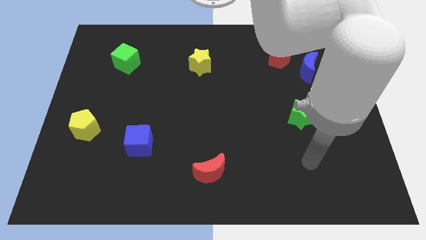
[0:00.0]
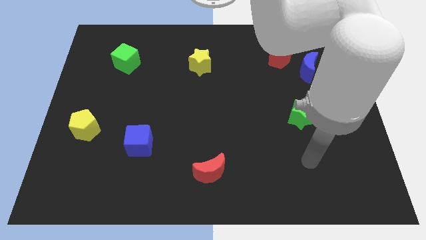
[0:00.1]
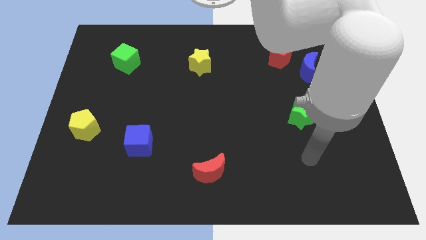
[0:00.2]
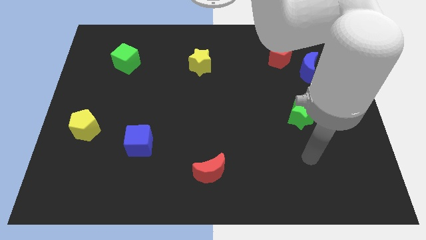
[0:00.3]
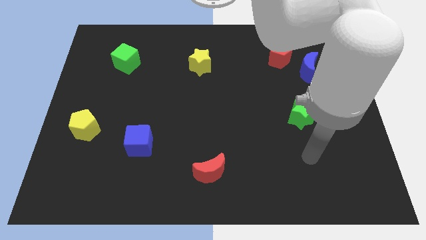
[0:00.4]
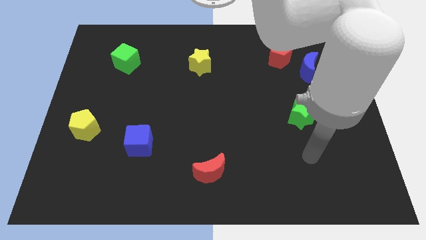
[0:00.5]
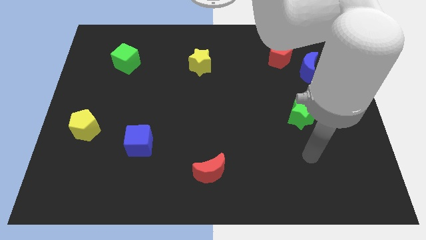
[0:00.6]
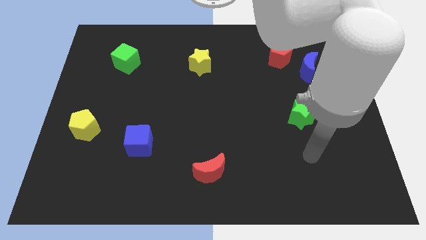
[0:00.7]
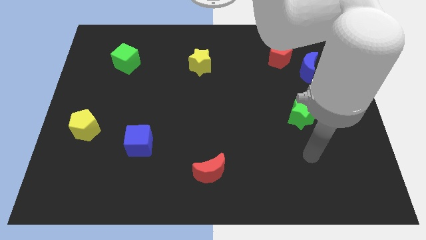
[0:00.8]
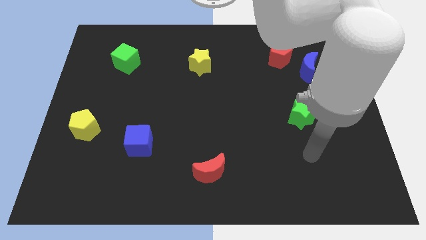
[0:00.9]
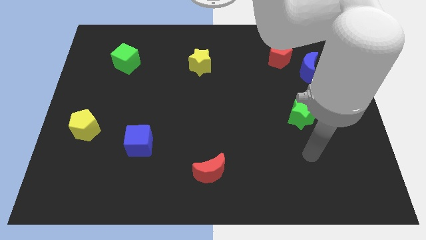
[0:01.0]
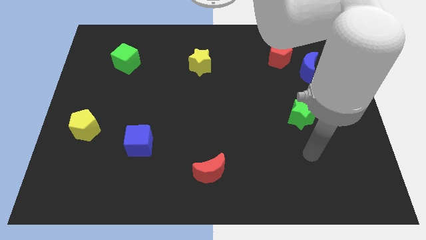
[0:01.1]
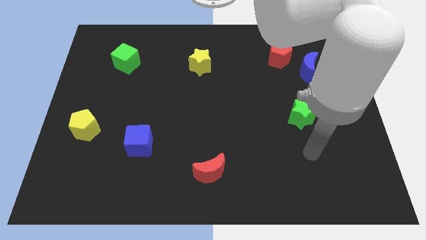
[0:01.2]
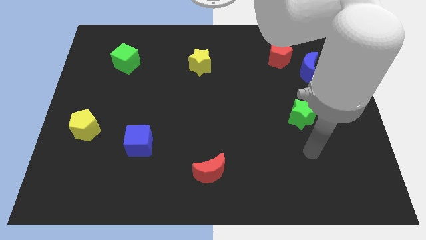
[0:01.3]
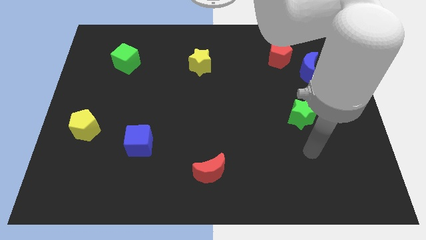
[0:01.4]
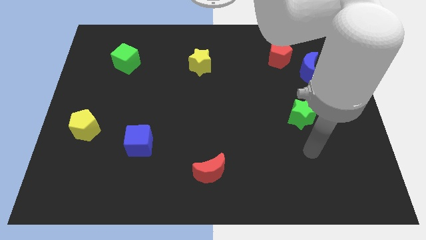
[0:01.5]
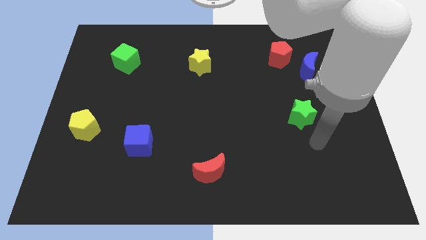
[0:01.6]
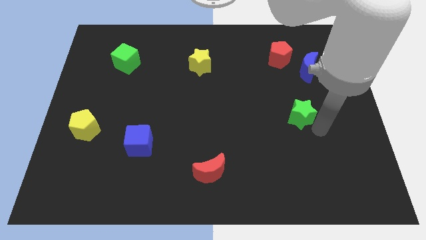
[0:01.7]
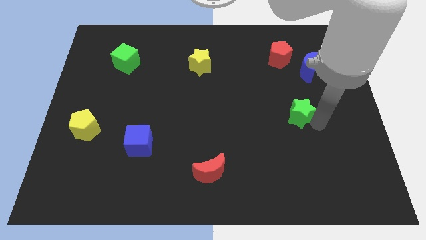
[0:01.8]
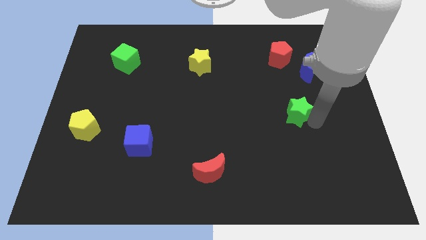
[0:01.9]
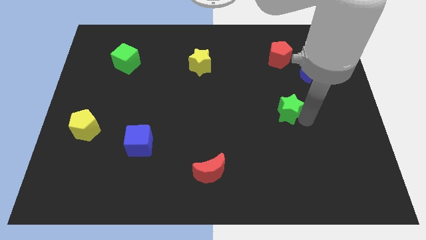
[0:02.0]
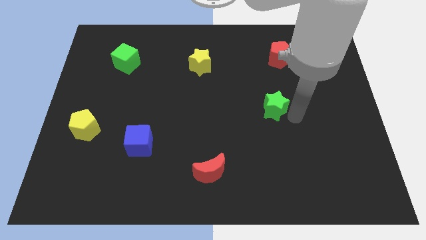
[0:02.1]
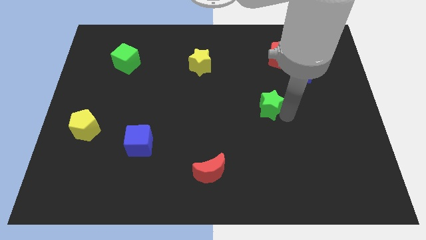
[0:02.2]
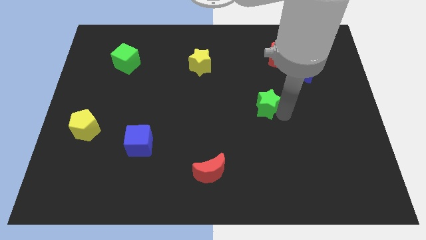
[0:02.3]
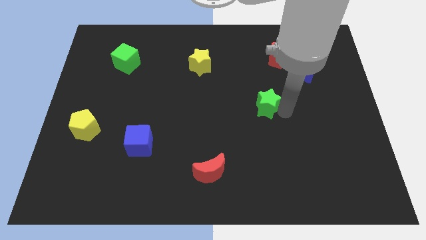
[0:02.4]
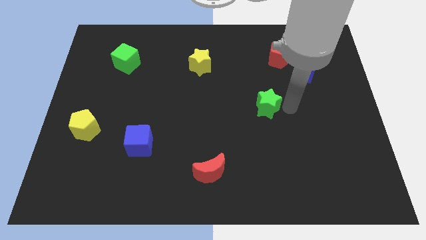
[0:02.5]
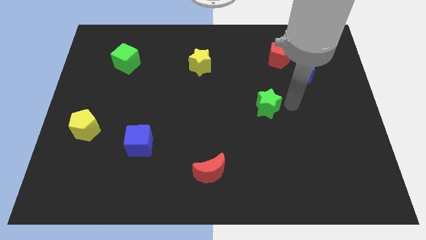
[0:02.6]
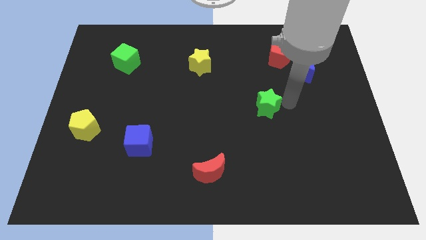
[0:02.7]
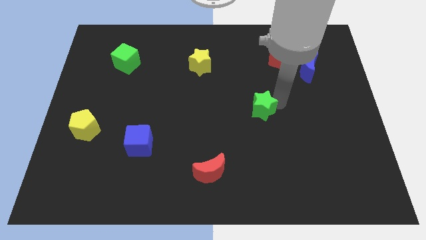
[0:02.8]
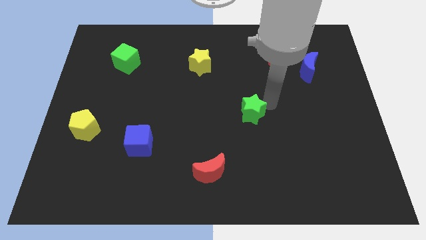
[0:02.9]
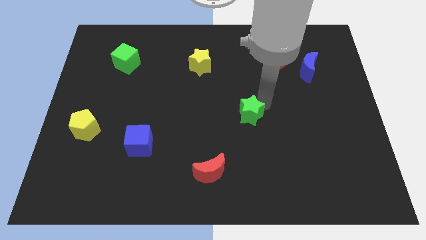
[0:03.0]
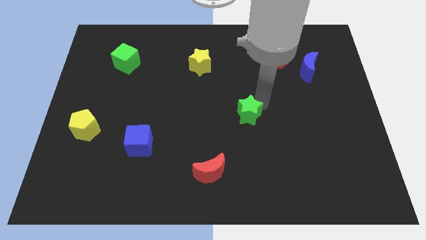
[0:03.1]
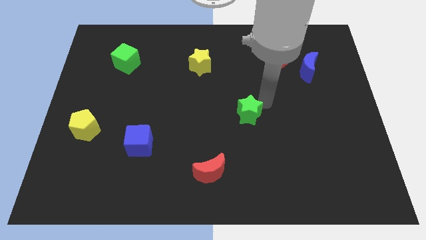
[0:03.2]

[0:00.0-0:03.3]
push the green star to the left side of the table

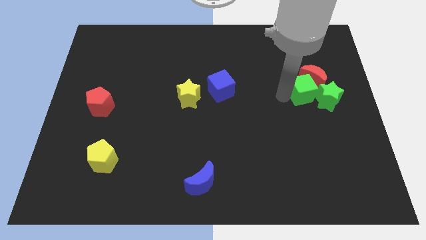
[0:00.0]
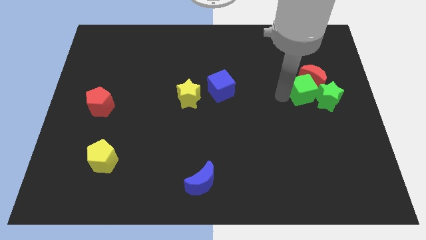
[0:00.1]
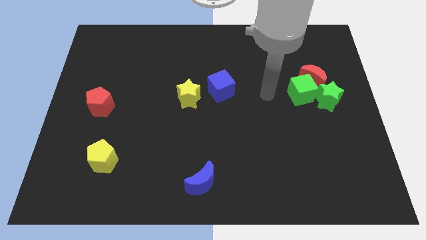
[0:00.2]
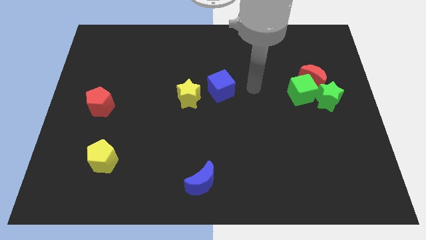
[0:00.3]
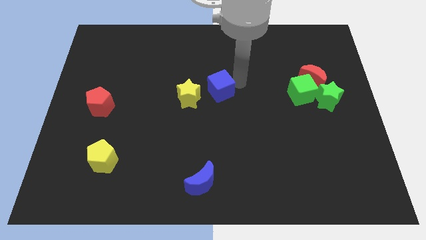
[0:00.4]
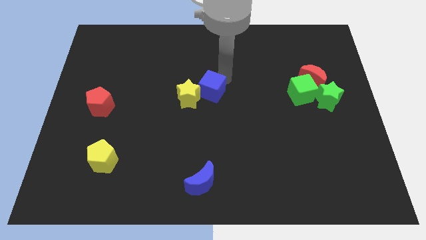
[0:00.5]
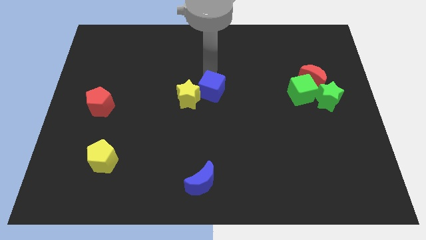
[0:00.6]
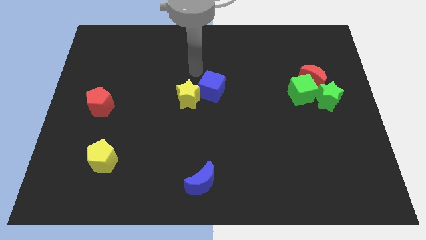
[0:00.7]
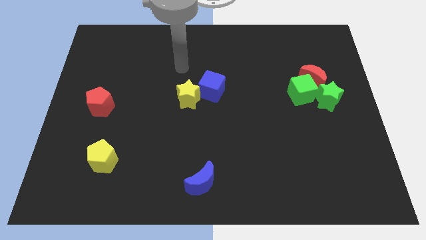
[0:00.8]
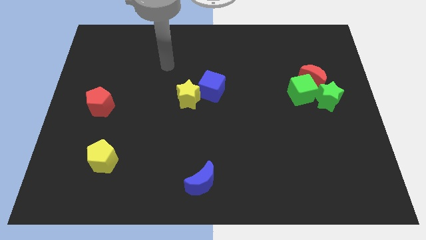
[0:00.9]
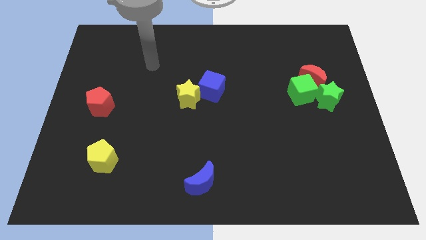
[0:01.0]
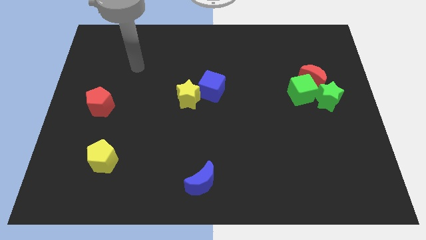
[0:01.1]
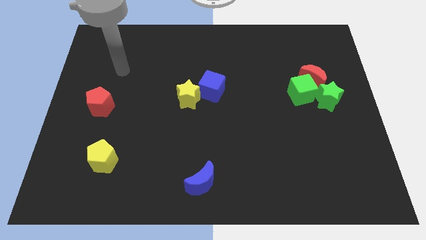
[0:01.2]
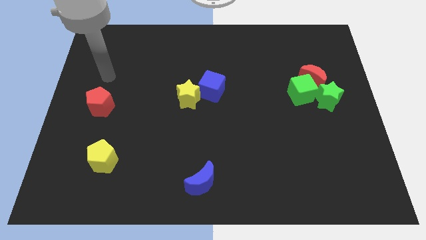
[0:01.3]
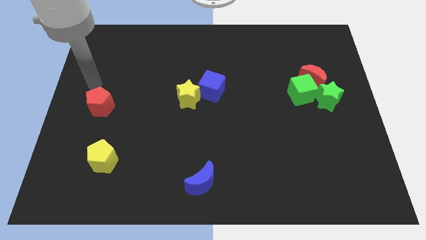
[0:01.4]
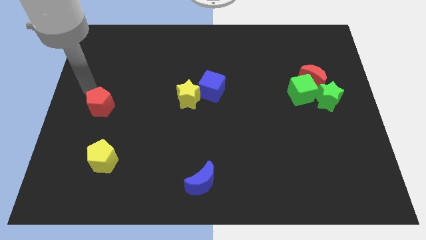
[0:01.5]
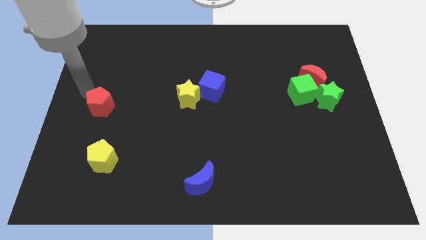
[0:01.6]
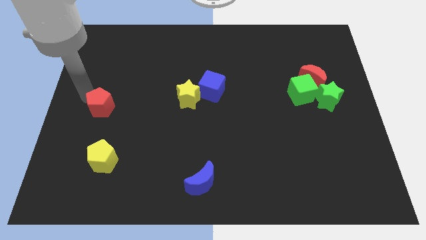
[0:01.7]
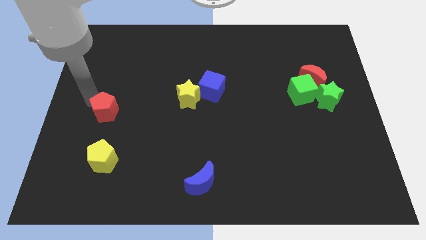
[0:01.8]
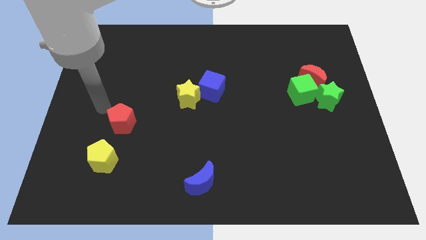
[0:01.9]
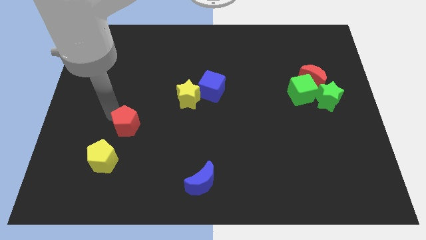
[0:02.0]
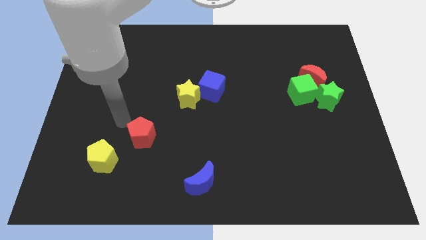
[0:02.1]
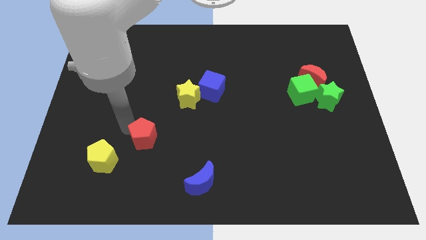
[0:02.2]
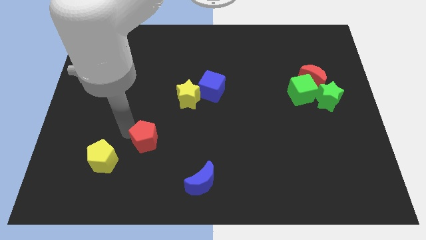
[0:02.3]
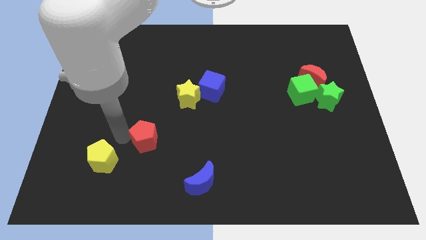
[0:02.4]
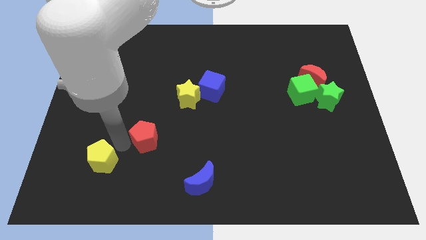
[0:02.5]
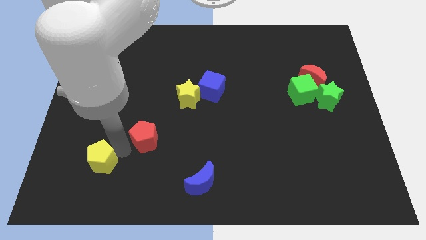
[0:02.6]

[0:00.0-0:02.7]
push the red pentagon towards the blue crescent

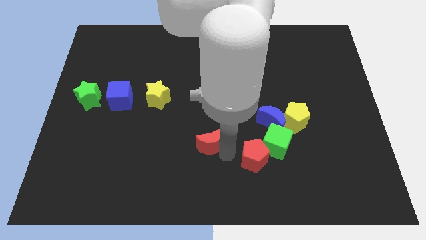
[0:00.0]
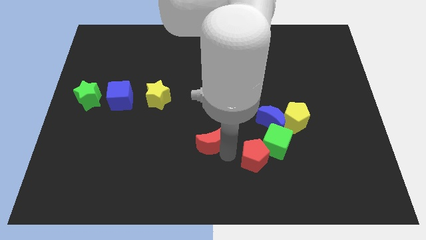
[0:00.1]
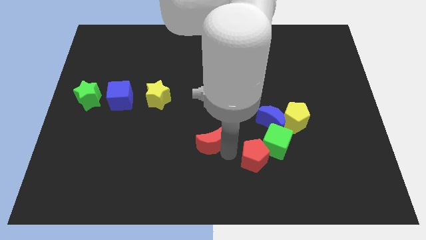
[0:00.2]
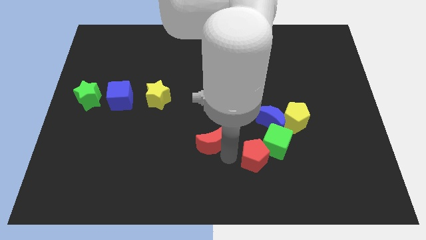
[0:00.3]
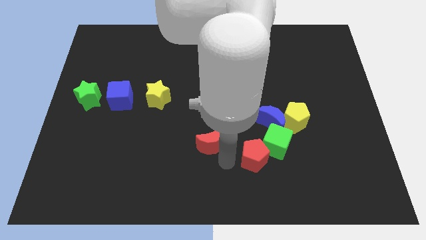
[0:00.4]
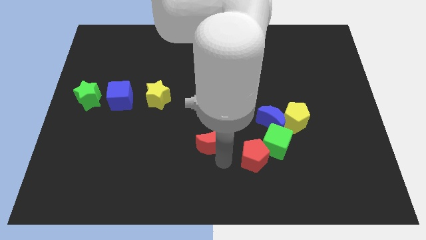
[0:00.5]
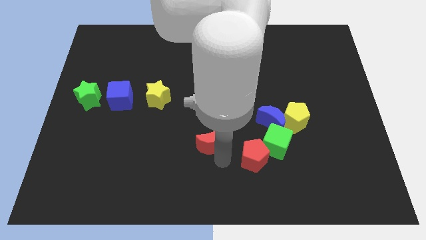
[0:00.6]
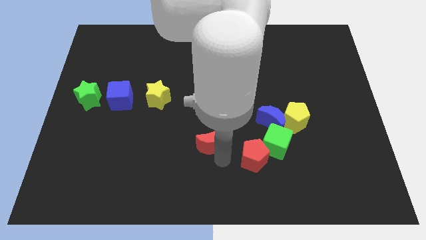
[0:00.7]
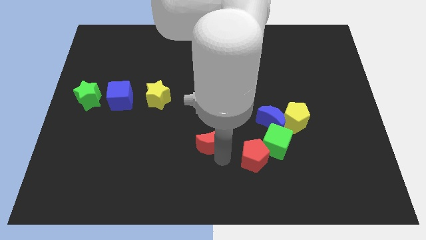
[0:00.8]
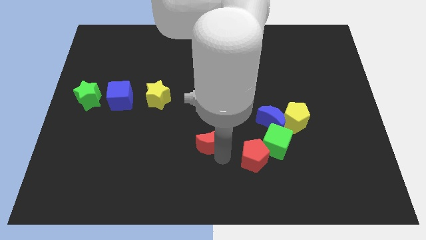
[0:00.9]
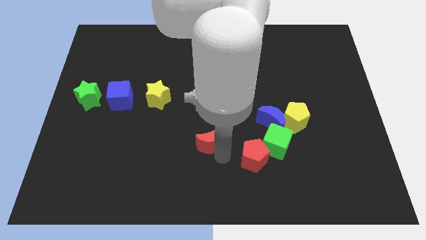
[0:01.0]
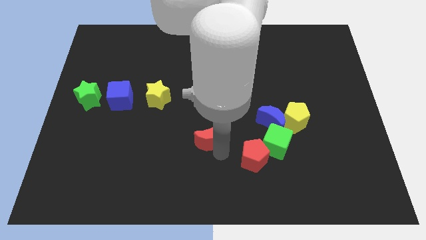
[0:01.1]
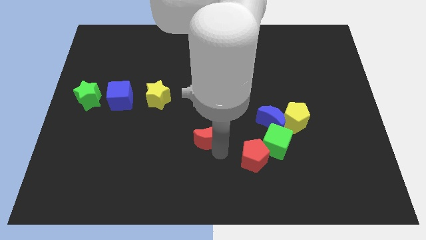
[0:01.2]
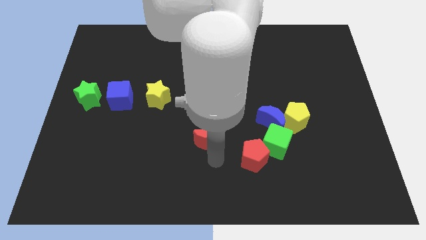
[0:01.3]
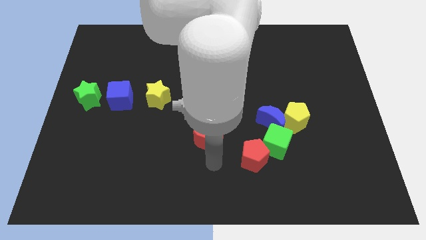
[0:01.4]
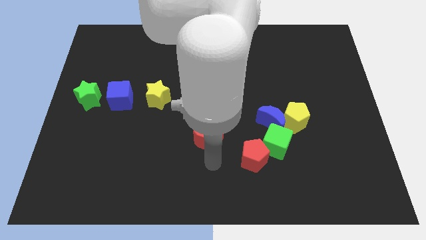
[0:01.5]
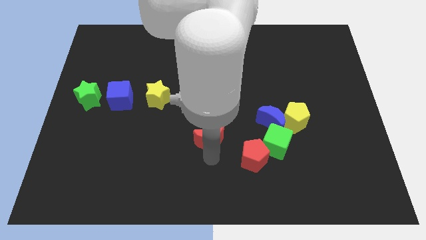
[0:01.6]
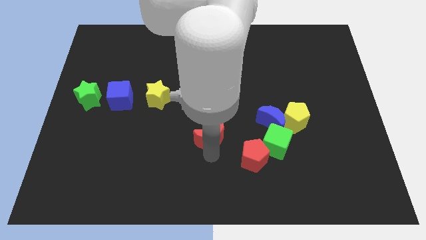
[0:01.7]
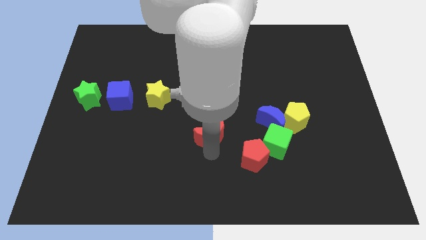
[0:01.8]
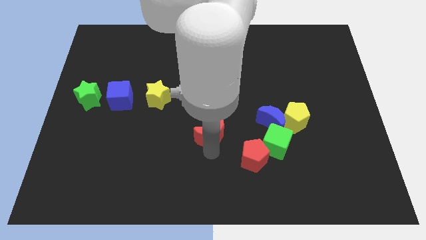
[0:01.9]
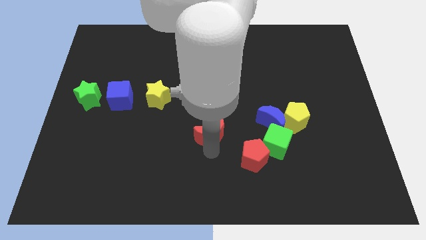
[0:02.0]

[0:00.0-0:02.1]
push the red crescent upwards

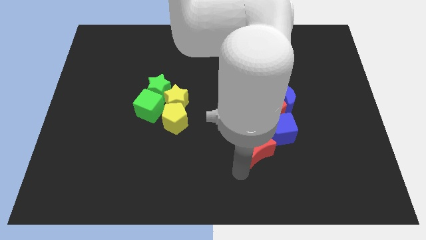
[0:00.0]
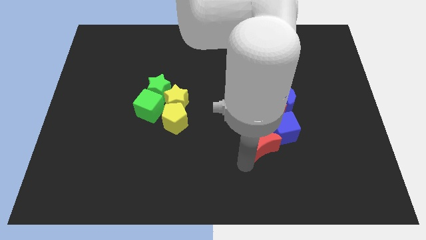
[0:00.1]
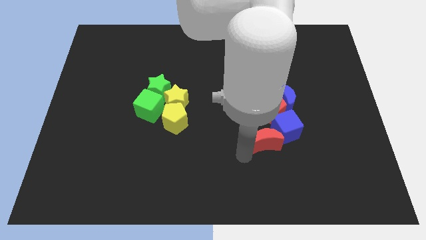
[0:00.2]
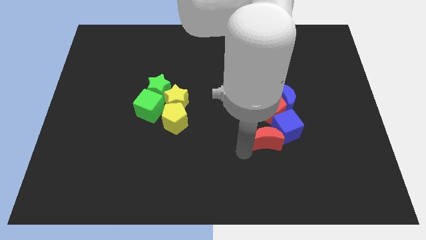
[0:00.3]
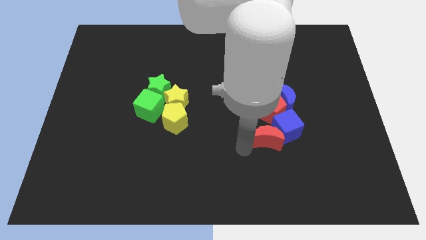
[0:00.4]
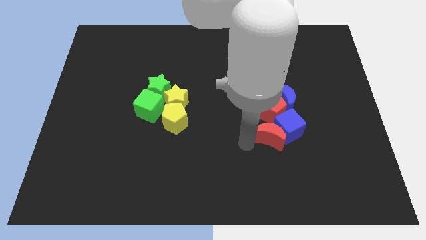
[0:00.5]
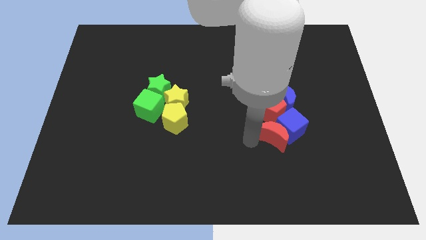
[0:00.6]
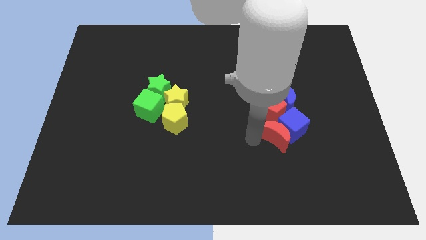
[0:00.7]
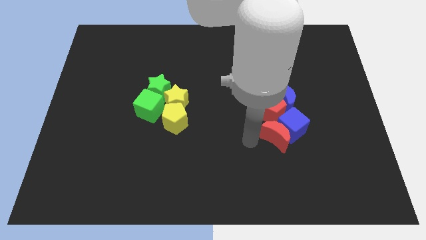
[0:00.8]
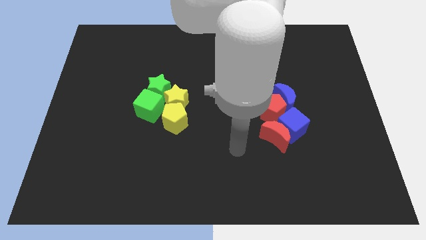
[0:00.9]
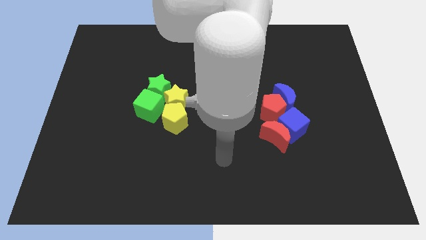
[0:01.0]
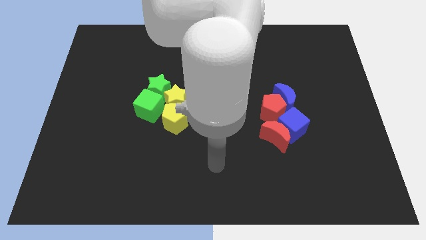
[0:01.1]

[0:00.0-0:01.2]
add red moon to the group of blue and red blocks
